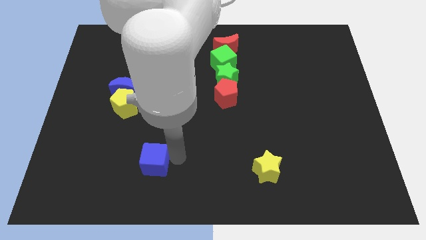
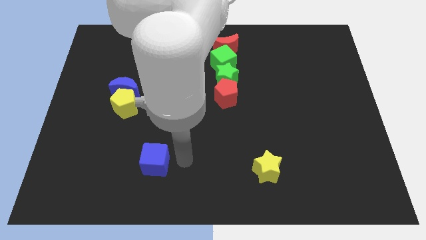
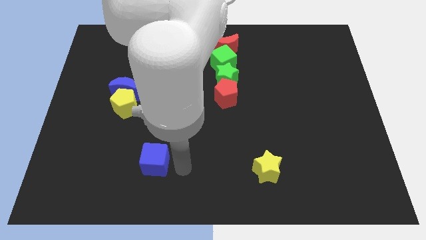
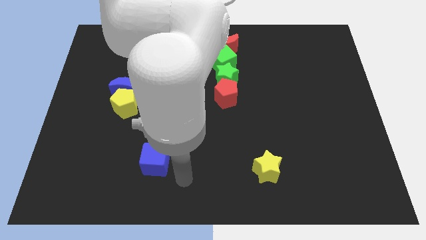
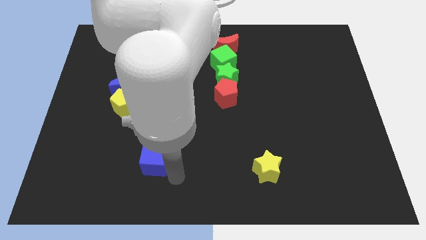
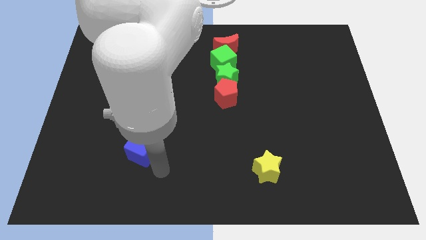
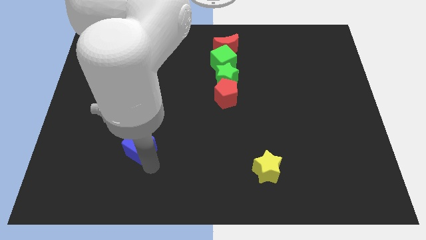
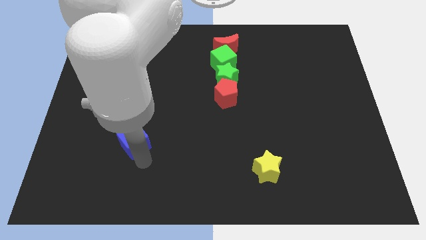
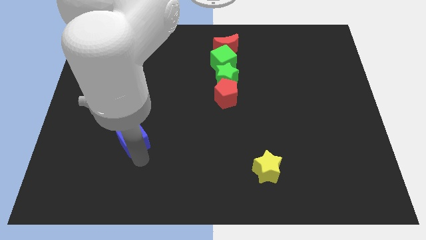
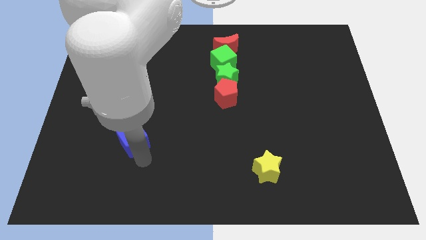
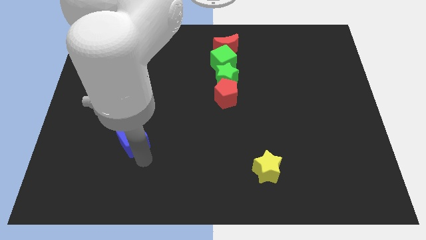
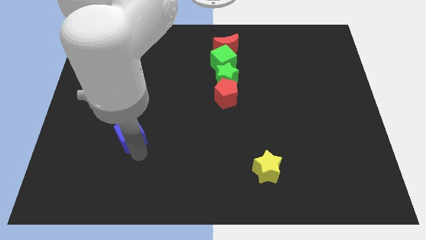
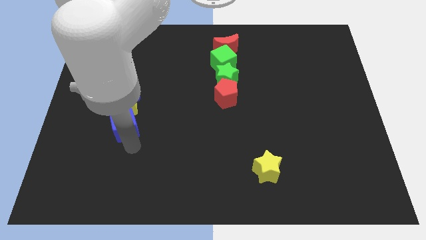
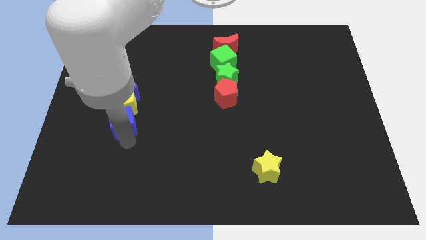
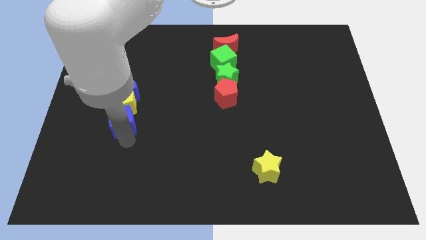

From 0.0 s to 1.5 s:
move the blue cube to the bottom of the yellow pentagon

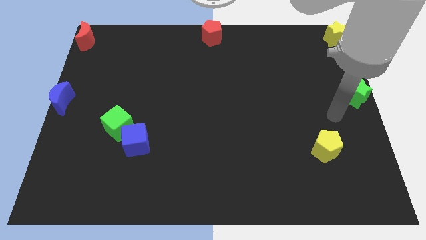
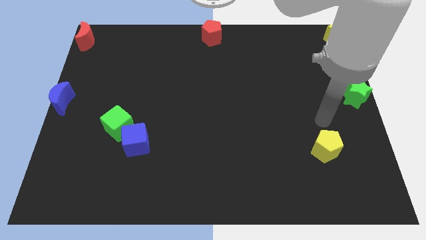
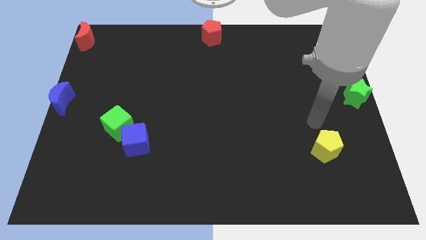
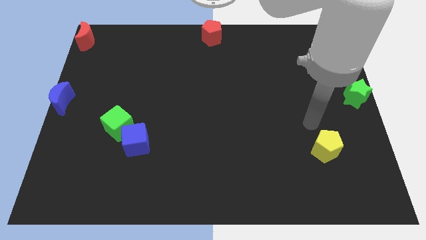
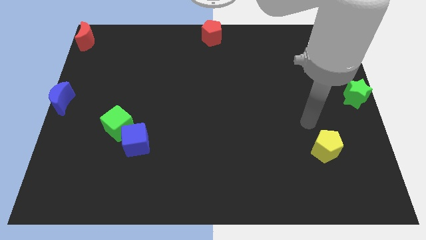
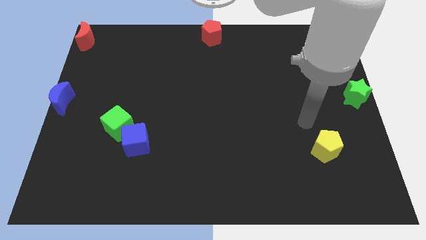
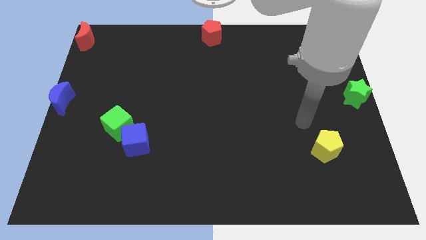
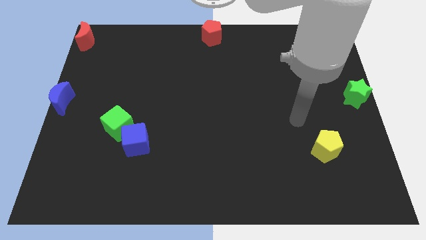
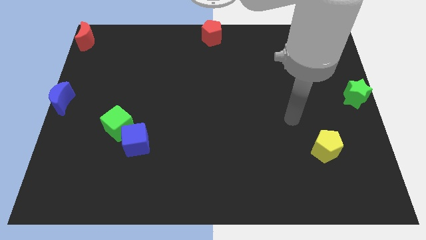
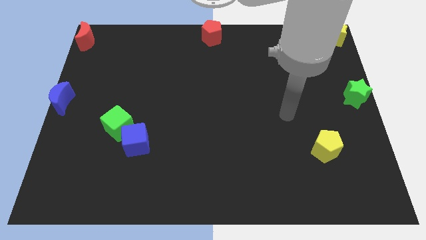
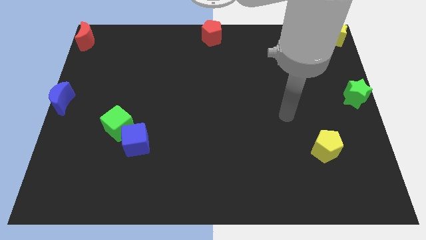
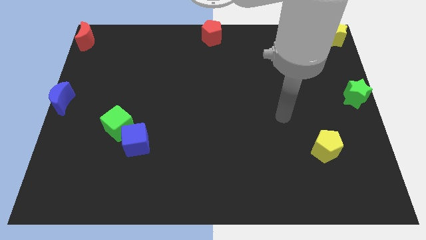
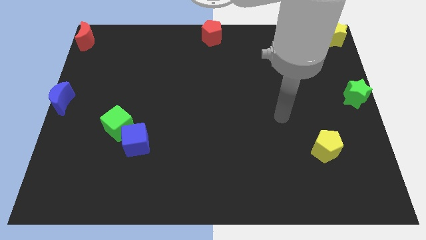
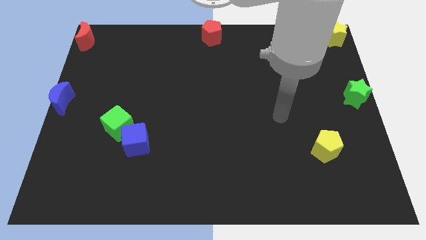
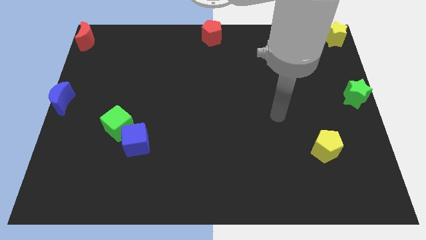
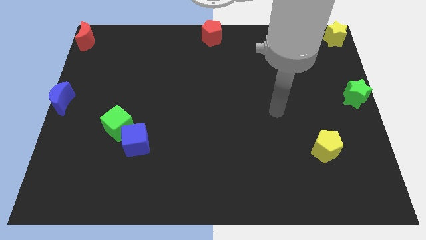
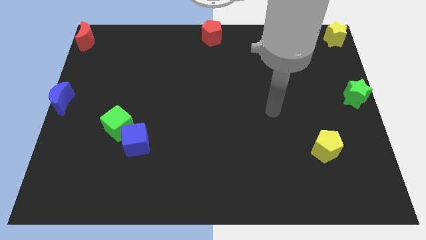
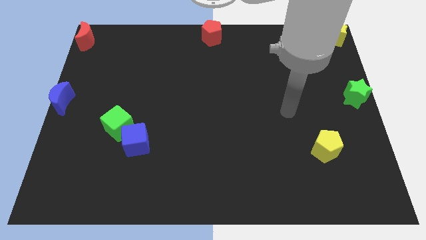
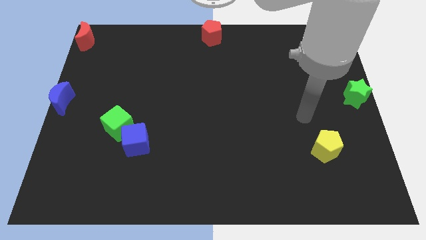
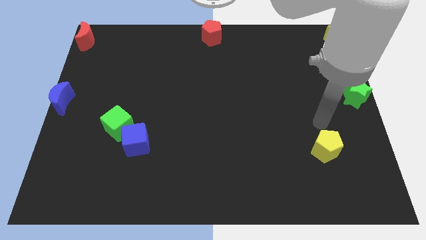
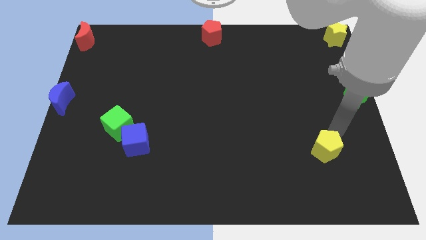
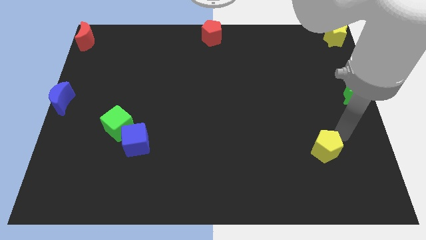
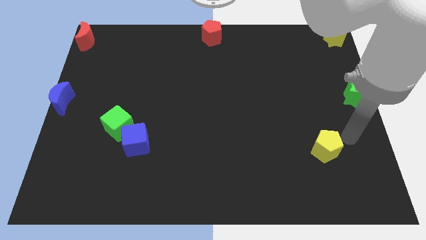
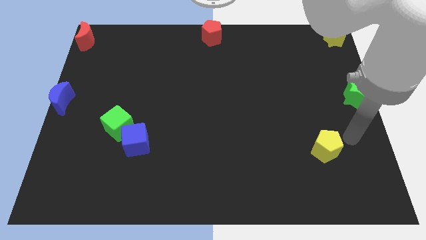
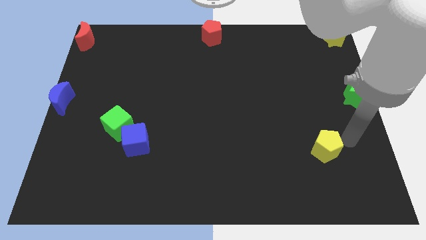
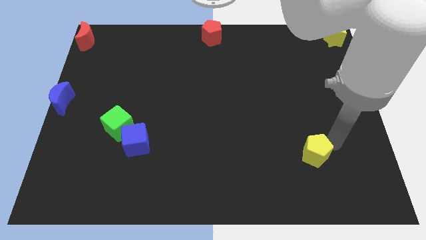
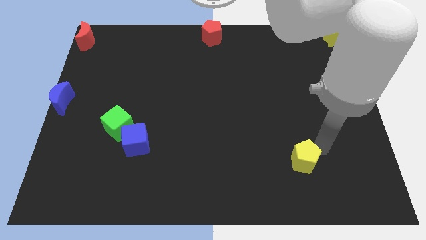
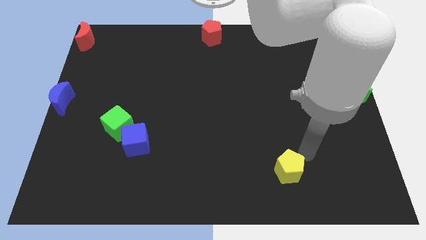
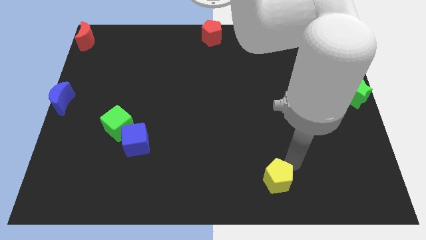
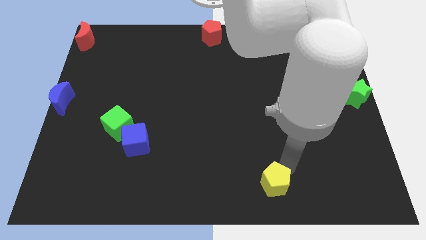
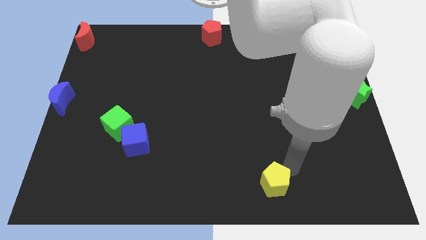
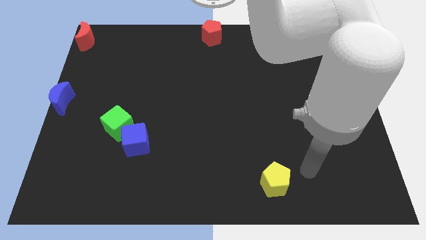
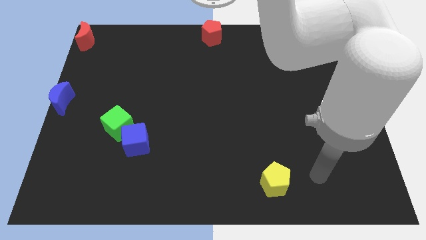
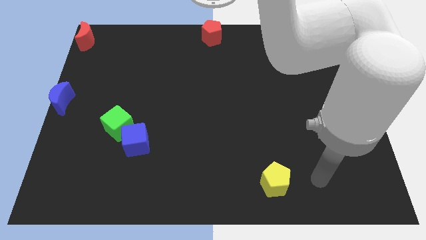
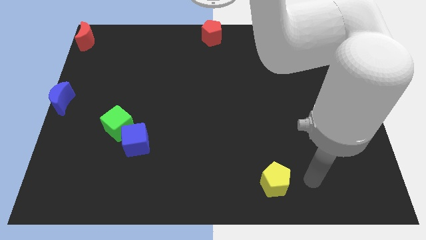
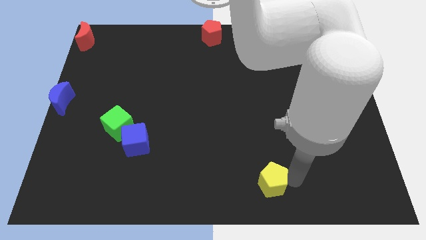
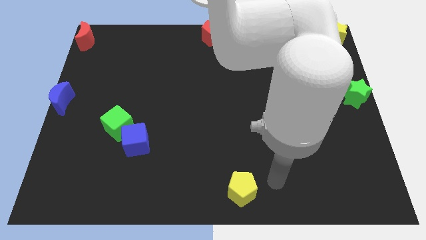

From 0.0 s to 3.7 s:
move the yellow pentagon to the bottom of the board

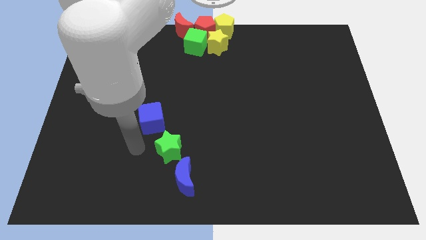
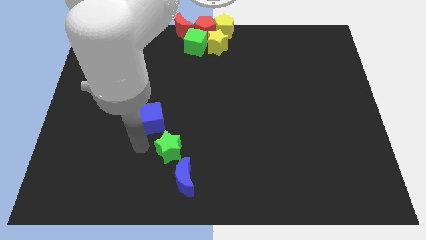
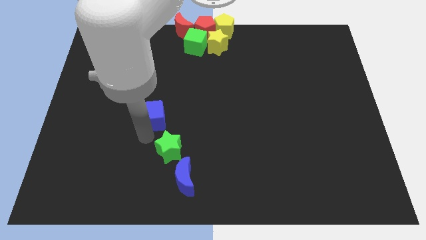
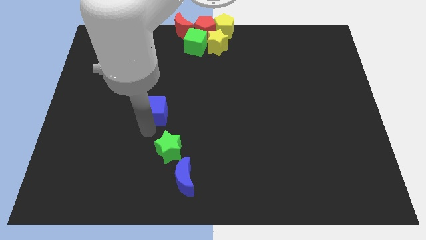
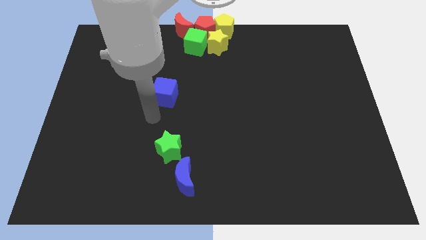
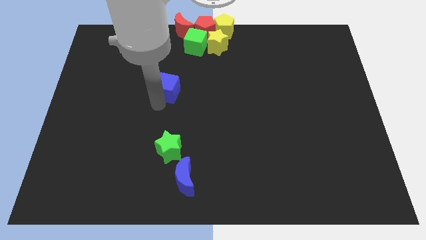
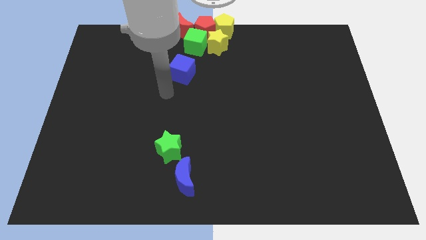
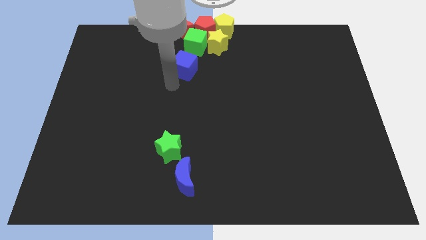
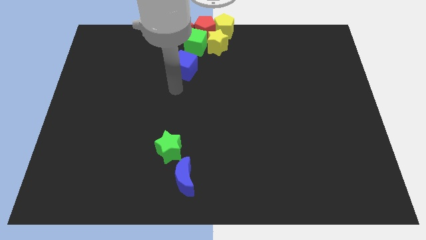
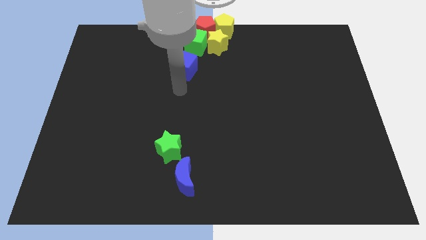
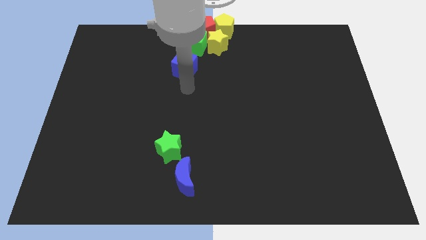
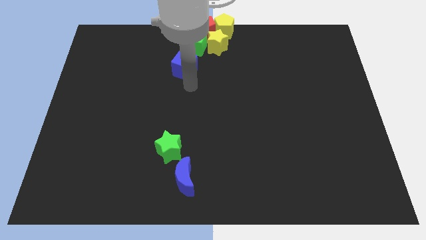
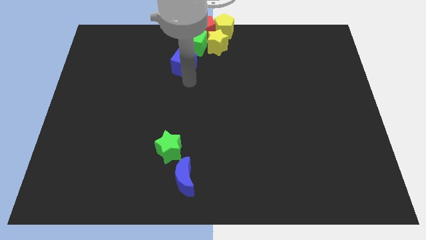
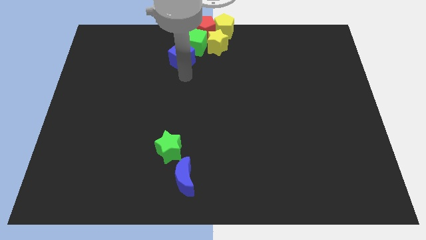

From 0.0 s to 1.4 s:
push the blue cube into the green cube

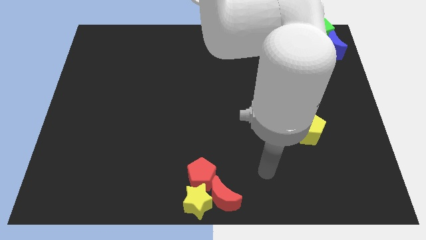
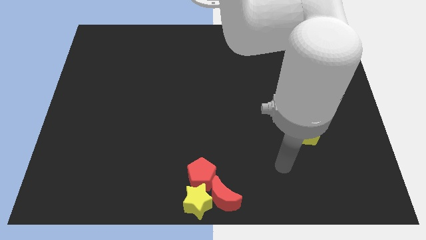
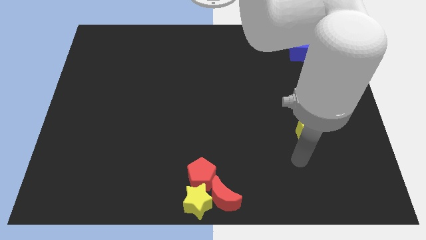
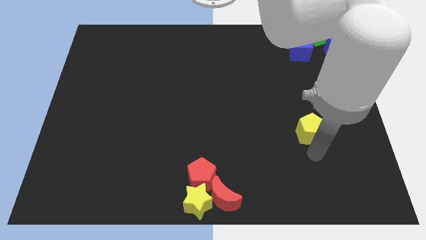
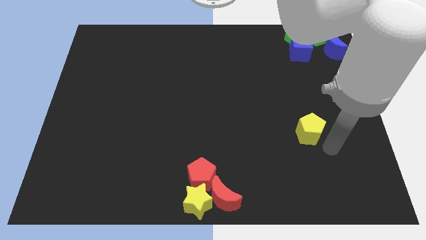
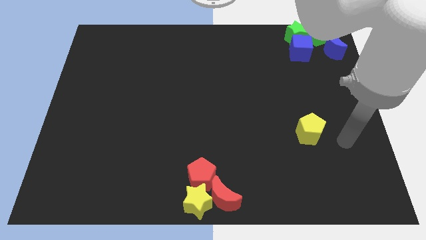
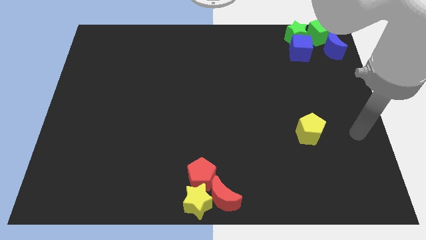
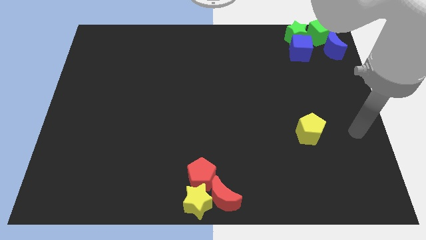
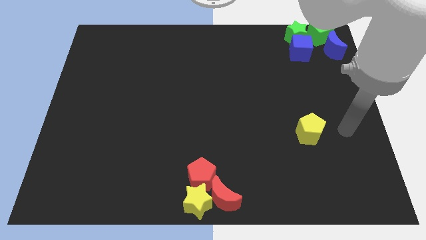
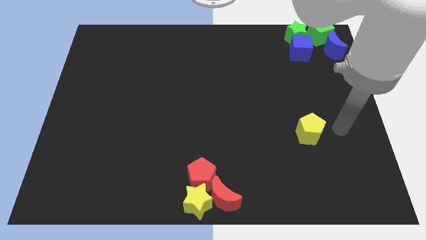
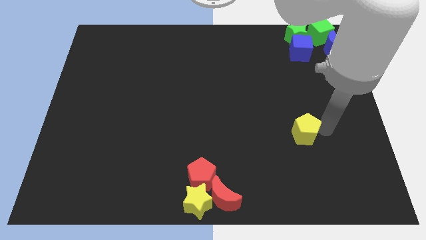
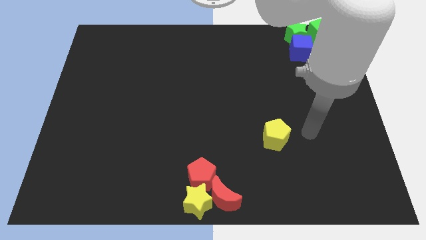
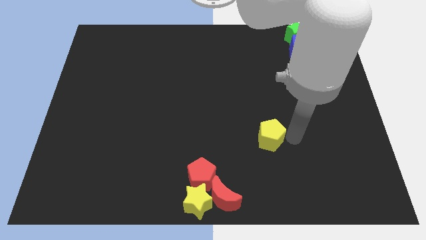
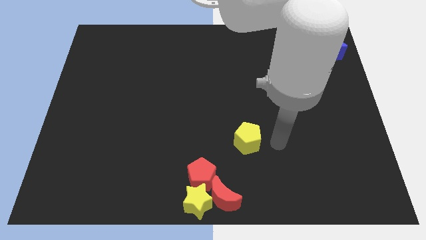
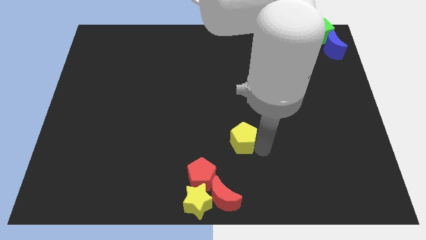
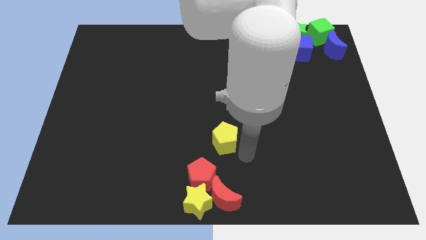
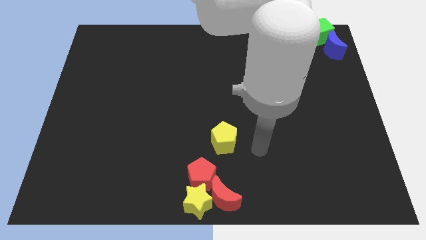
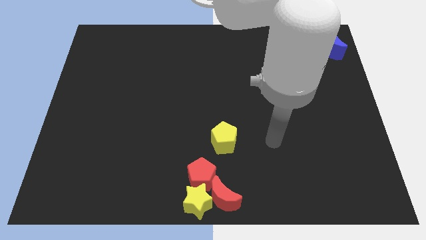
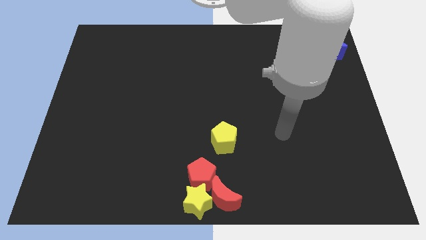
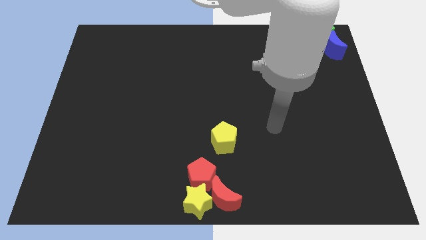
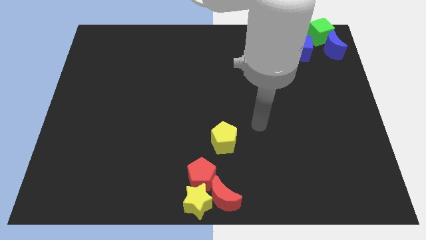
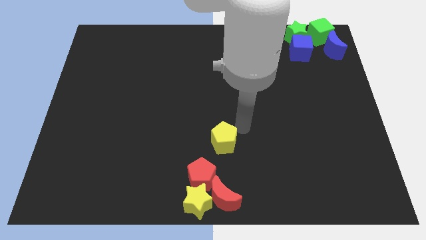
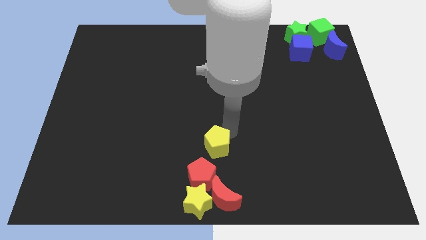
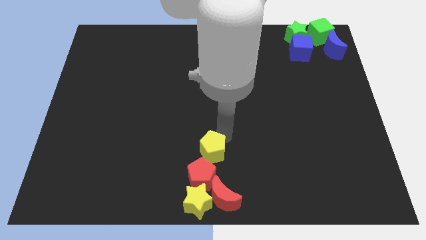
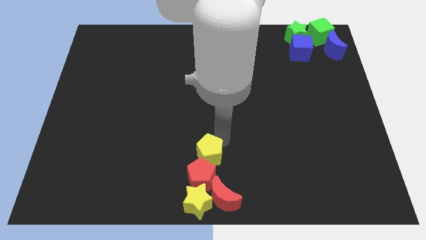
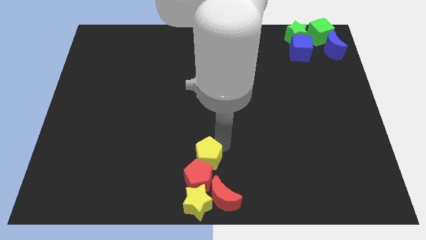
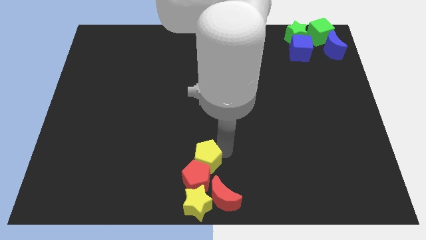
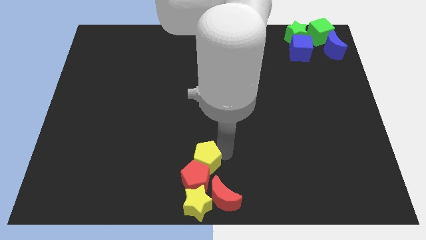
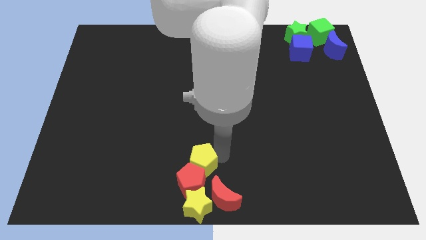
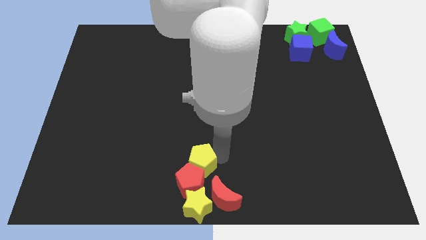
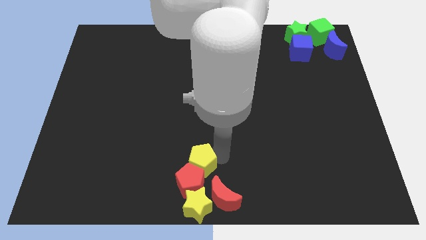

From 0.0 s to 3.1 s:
slide the yellow pentagon into the red pentagon
